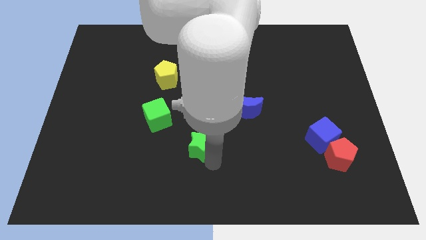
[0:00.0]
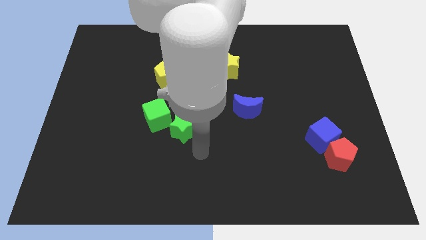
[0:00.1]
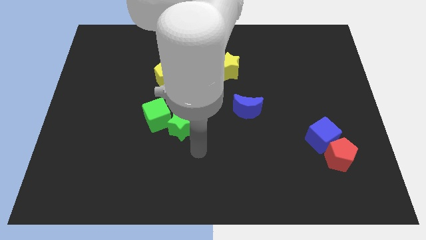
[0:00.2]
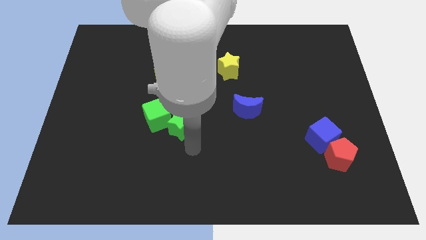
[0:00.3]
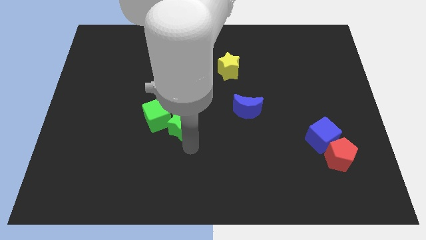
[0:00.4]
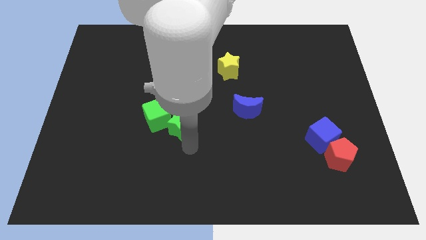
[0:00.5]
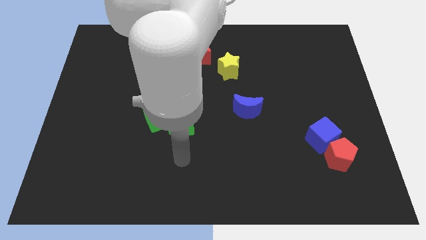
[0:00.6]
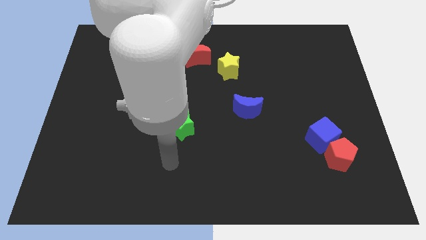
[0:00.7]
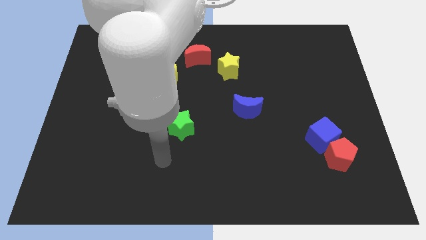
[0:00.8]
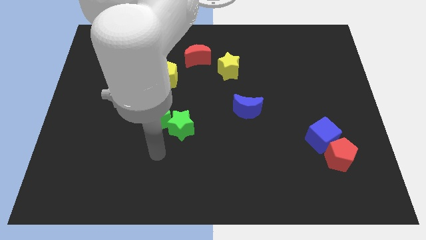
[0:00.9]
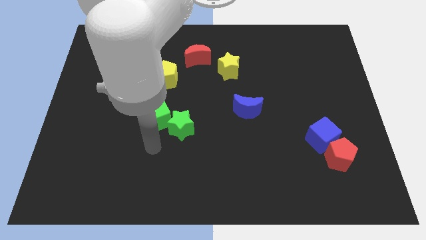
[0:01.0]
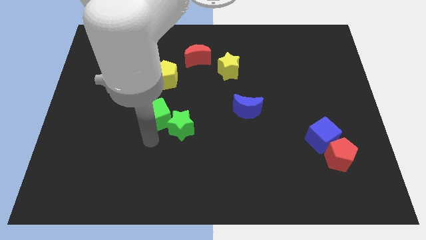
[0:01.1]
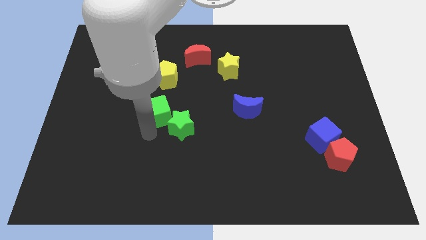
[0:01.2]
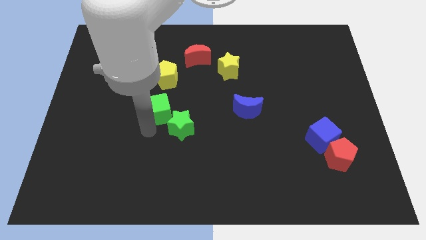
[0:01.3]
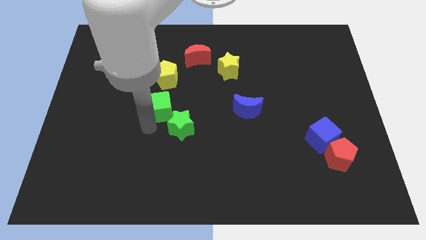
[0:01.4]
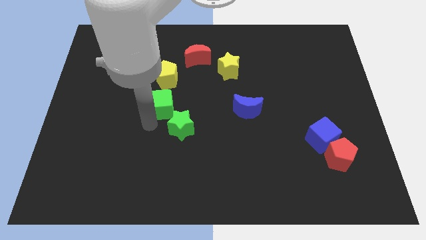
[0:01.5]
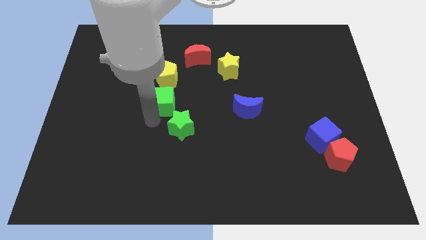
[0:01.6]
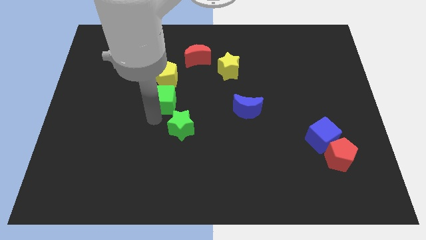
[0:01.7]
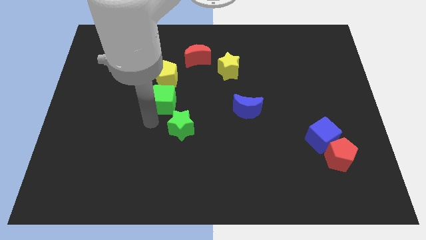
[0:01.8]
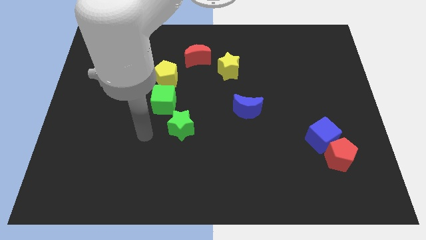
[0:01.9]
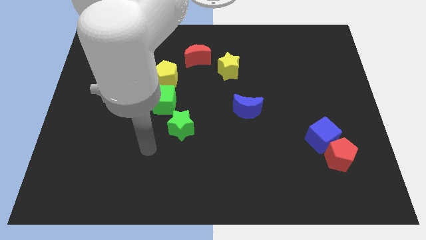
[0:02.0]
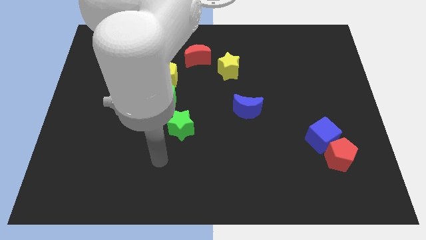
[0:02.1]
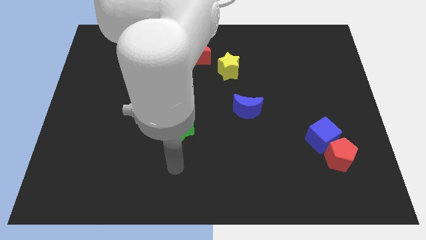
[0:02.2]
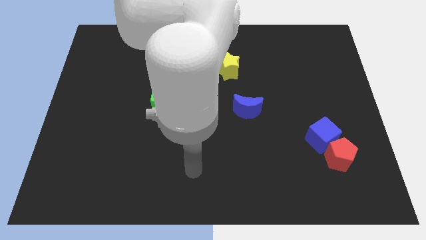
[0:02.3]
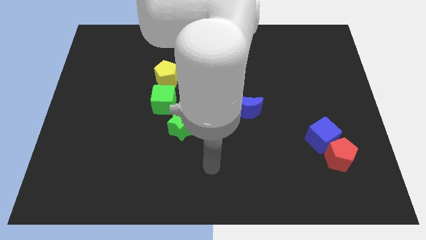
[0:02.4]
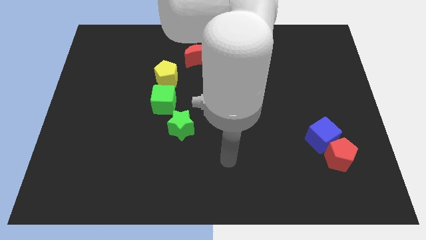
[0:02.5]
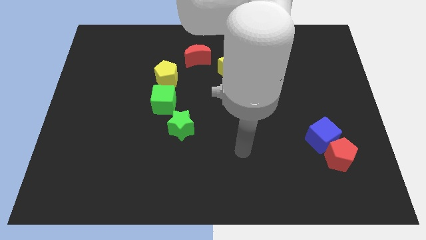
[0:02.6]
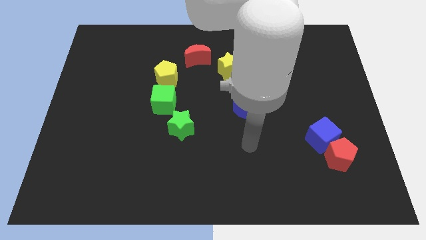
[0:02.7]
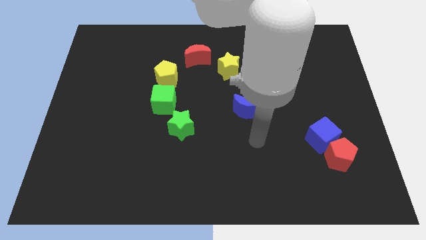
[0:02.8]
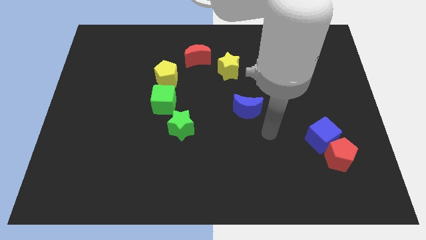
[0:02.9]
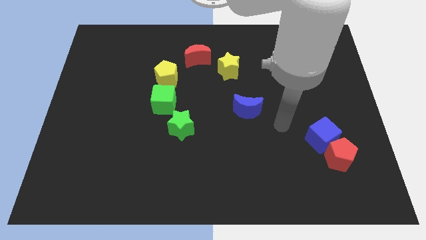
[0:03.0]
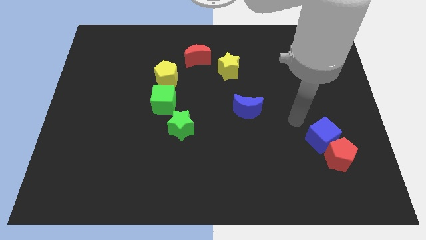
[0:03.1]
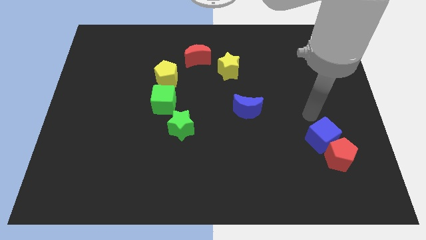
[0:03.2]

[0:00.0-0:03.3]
push the green star close to the green cube

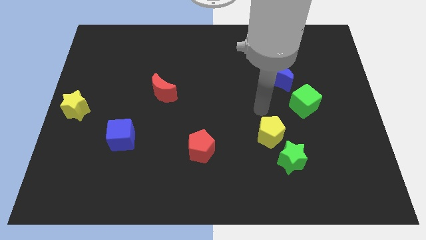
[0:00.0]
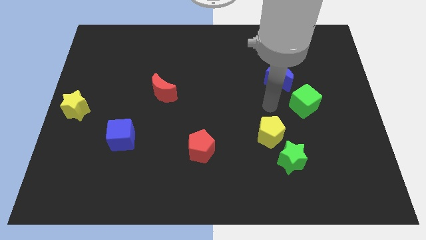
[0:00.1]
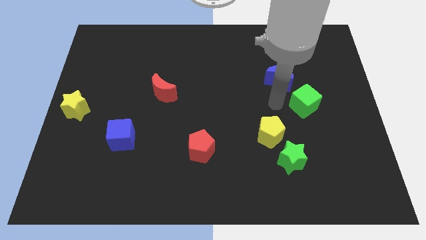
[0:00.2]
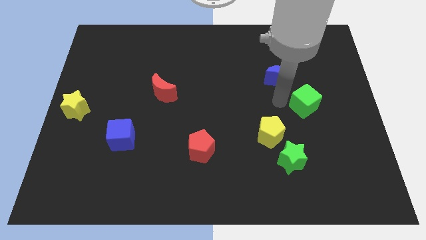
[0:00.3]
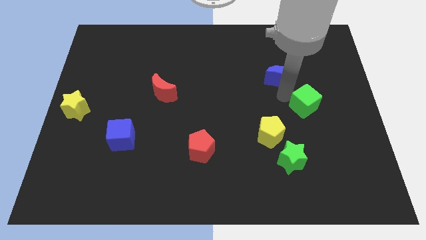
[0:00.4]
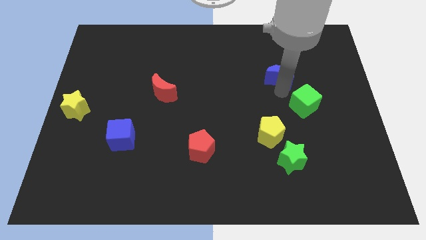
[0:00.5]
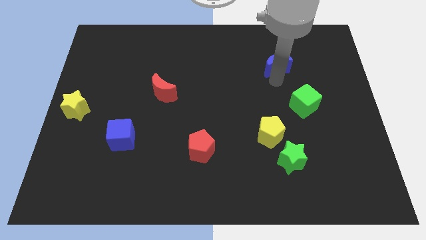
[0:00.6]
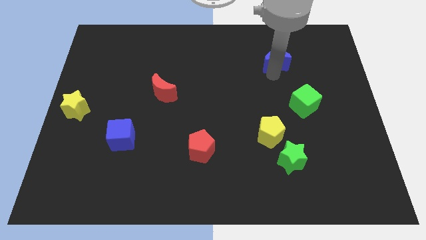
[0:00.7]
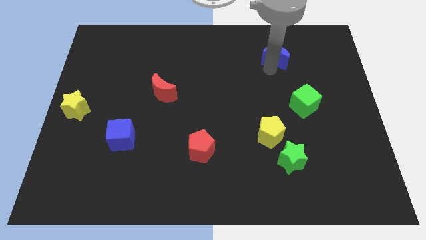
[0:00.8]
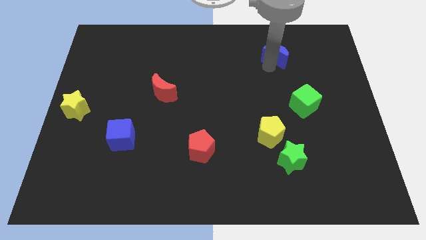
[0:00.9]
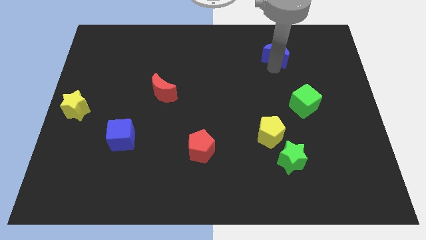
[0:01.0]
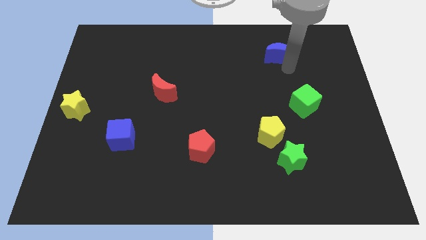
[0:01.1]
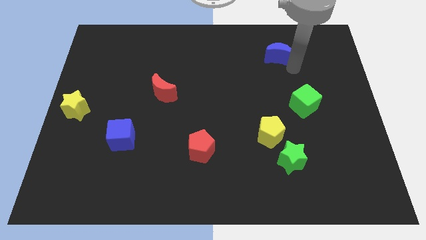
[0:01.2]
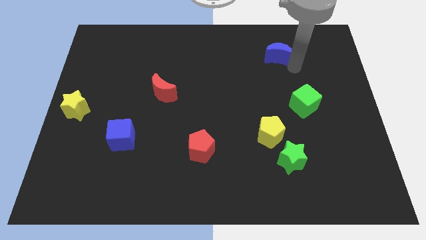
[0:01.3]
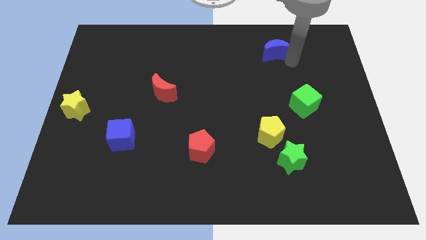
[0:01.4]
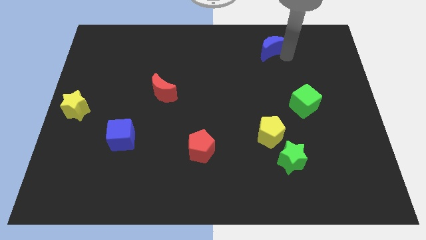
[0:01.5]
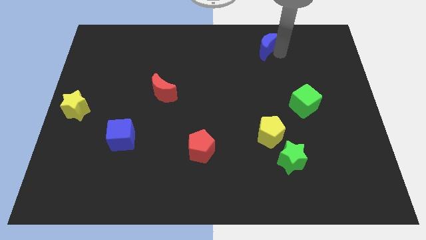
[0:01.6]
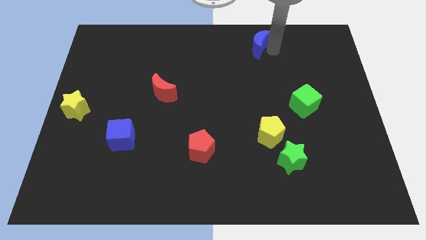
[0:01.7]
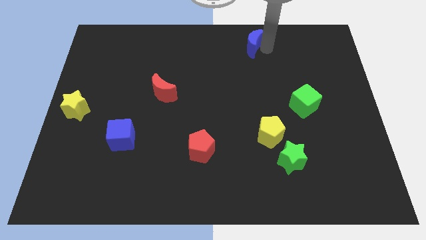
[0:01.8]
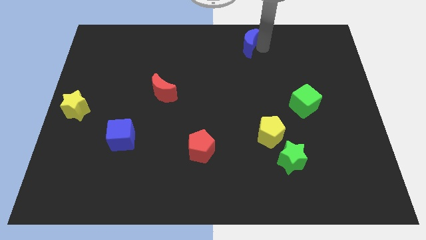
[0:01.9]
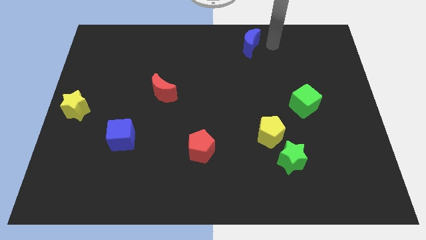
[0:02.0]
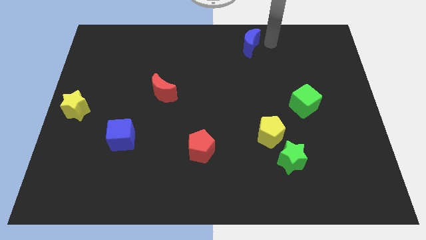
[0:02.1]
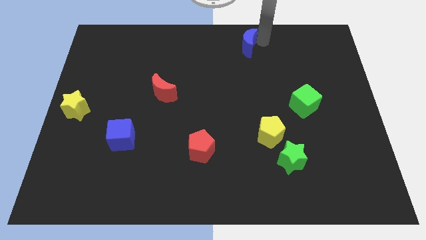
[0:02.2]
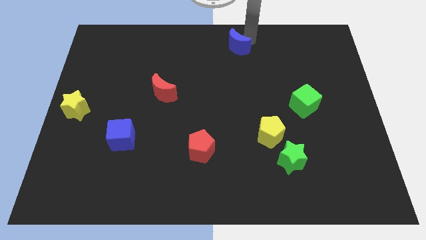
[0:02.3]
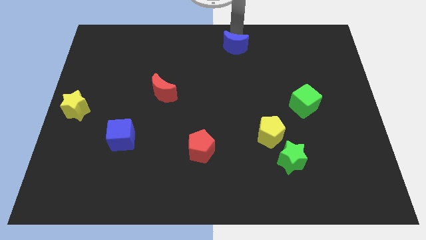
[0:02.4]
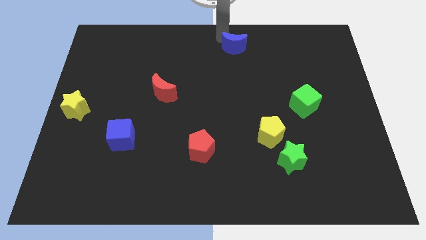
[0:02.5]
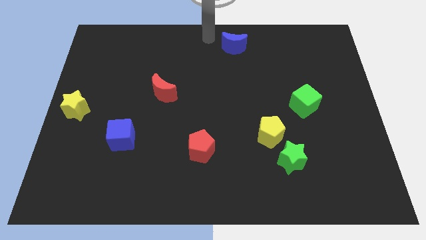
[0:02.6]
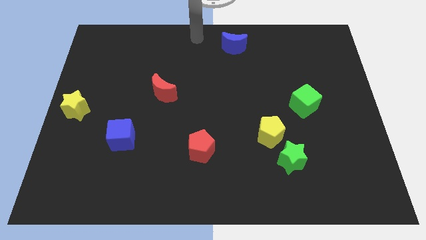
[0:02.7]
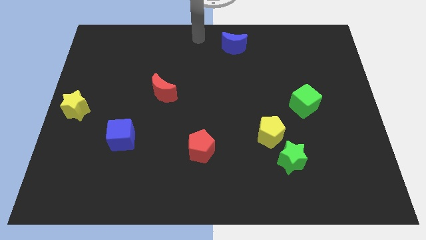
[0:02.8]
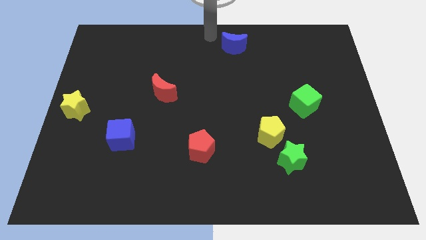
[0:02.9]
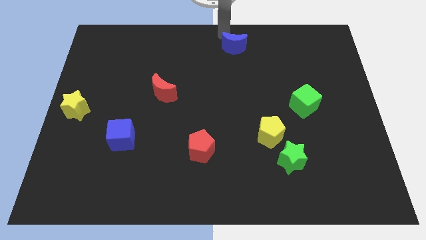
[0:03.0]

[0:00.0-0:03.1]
drag the blue moon to the top

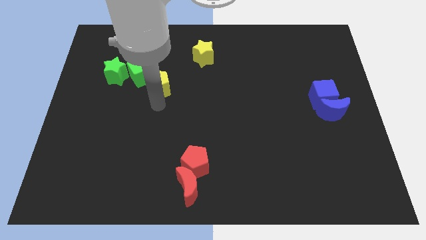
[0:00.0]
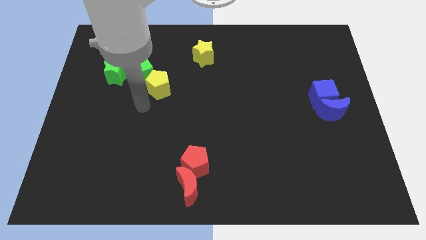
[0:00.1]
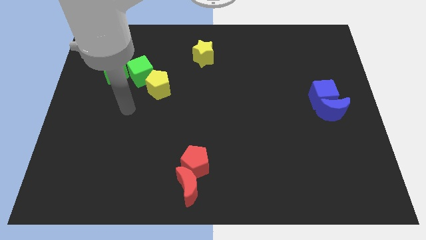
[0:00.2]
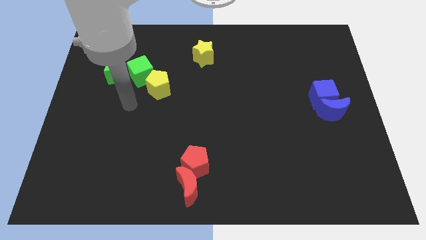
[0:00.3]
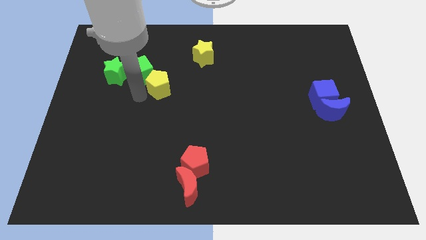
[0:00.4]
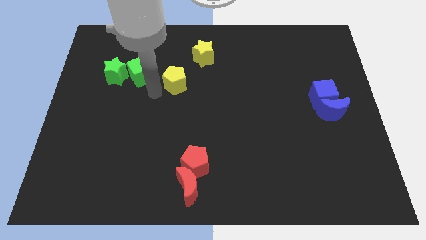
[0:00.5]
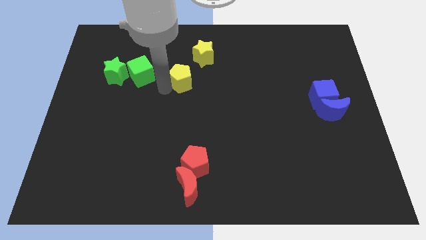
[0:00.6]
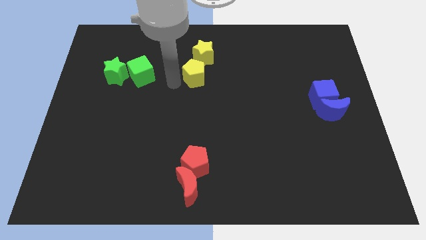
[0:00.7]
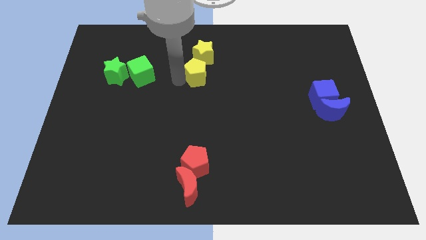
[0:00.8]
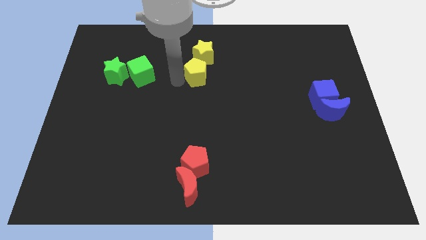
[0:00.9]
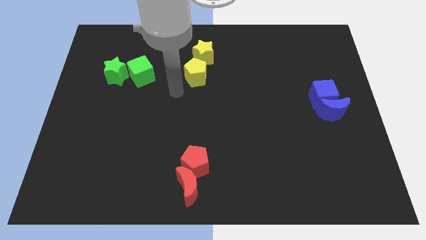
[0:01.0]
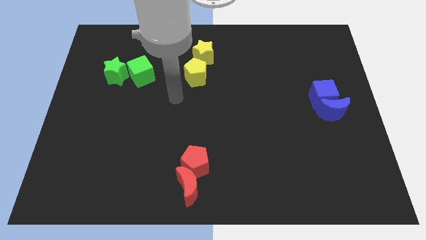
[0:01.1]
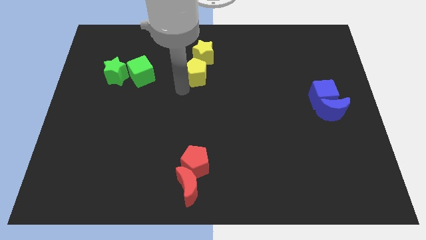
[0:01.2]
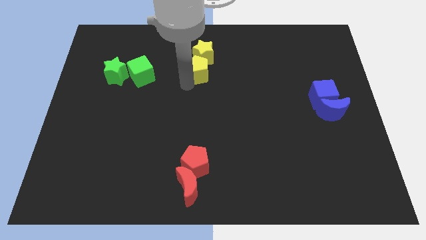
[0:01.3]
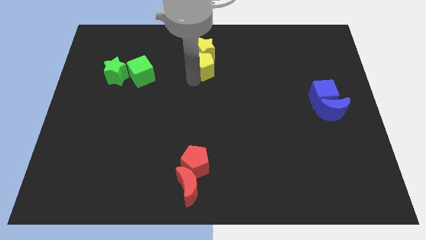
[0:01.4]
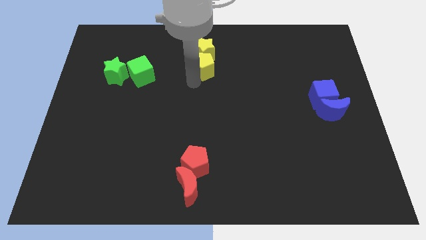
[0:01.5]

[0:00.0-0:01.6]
slide the yellow pentagon into the yellow star

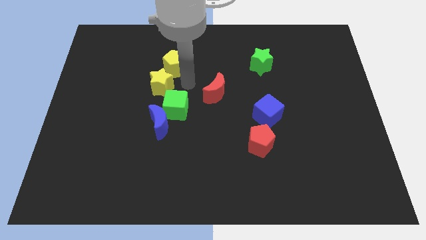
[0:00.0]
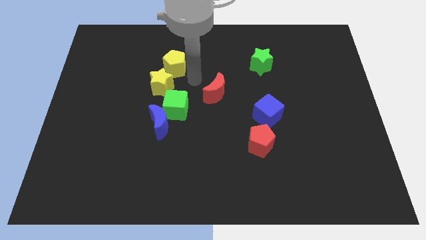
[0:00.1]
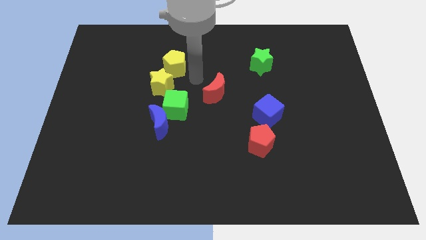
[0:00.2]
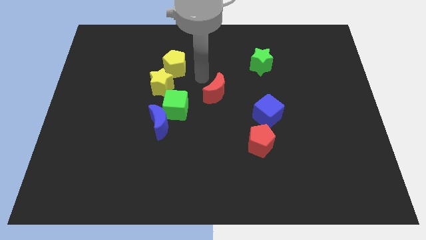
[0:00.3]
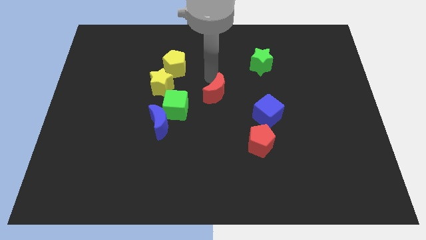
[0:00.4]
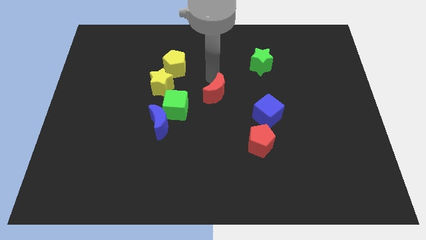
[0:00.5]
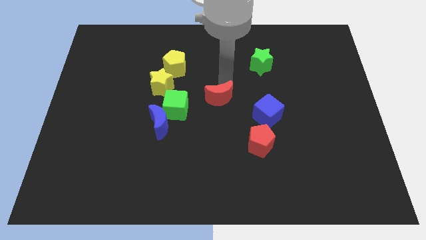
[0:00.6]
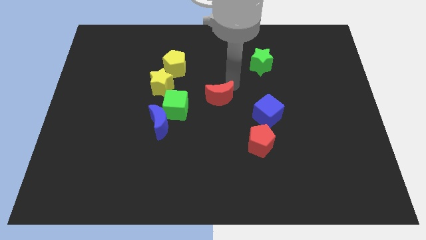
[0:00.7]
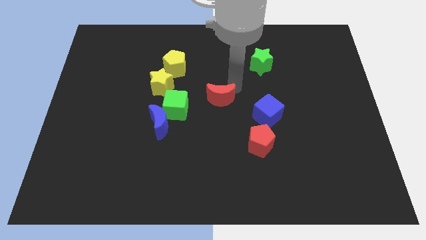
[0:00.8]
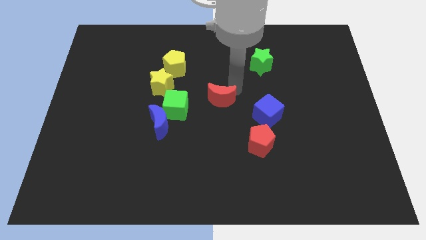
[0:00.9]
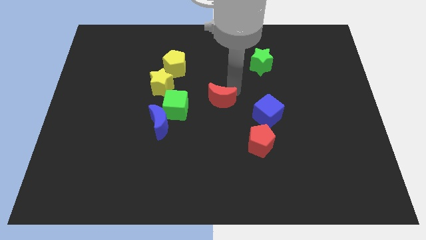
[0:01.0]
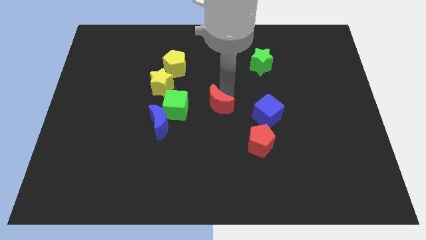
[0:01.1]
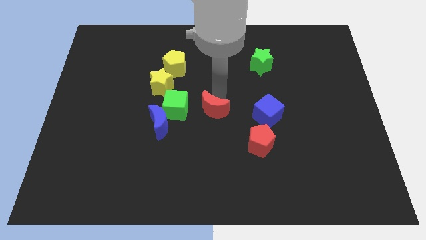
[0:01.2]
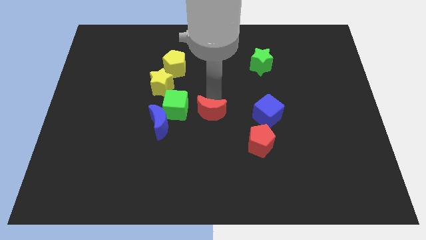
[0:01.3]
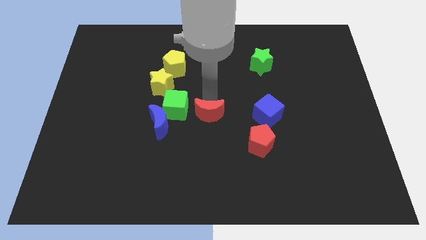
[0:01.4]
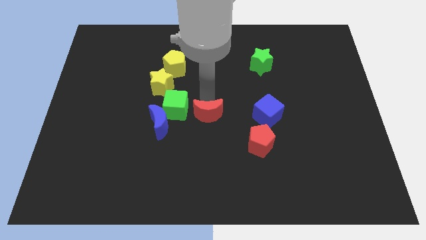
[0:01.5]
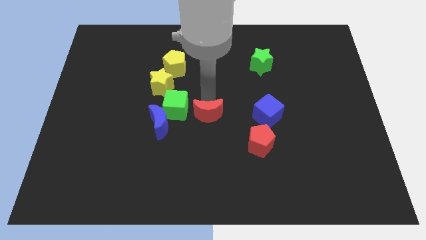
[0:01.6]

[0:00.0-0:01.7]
push the red crescent parallel right to the green cube
